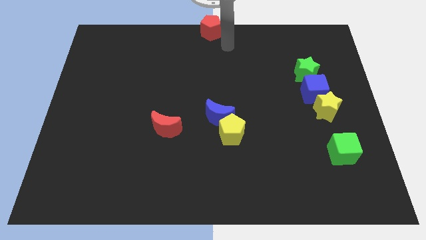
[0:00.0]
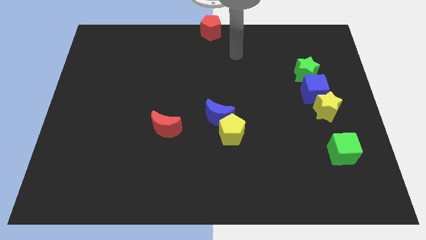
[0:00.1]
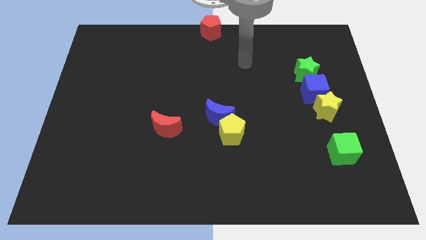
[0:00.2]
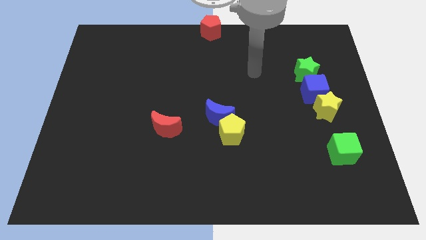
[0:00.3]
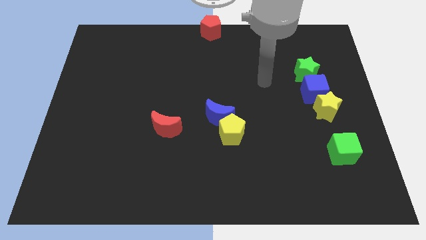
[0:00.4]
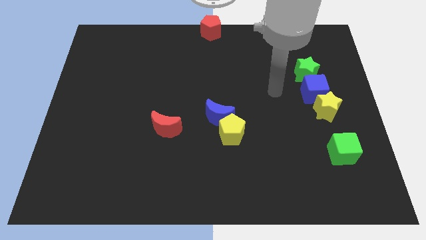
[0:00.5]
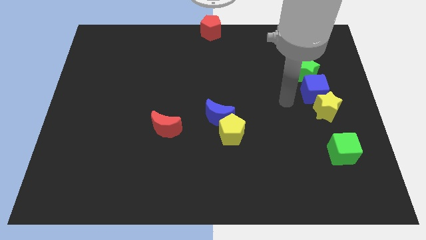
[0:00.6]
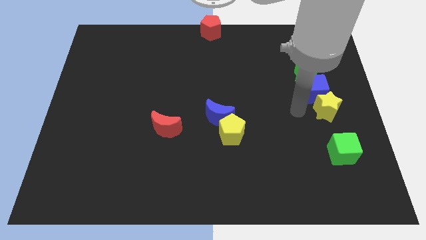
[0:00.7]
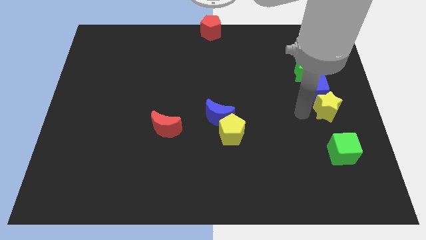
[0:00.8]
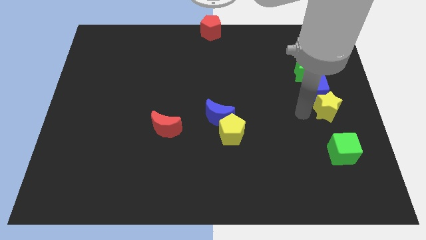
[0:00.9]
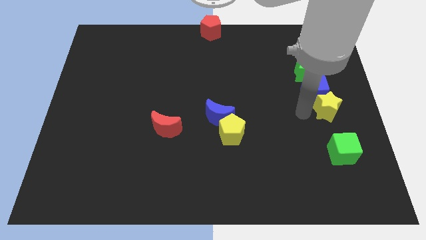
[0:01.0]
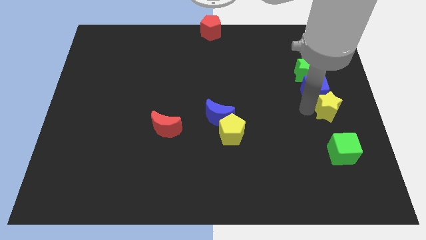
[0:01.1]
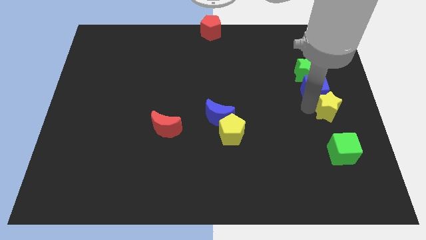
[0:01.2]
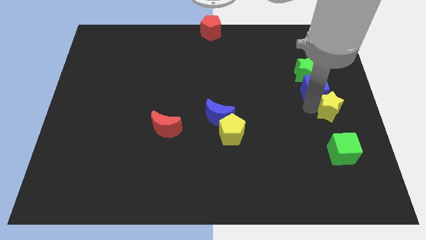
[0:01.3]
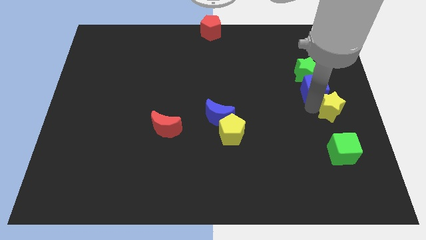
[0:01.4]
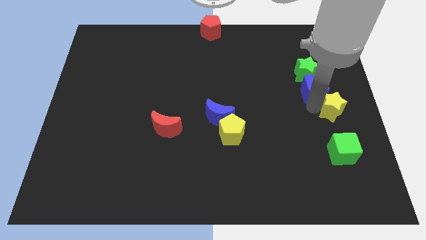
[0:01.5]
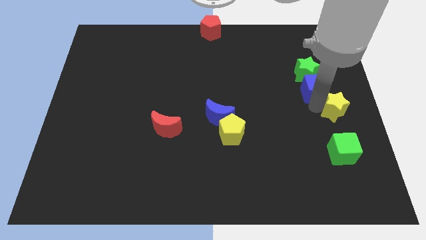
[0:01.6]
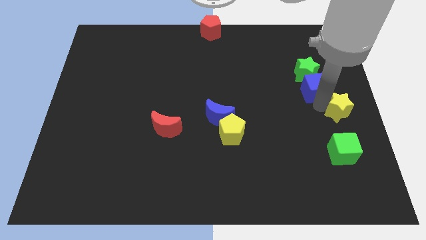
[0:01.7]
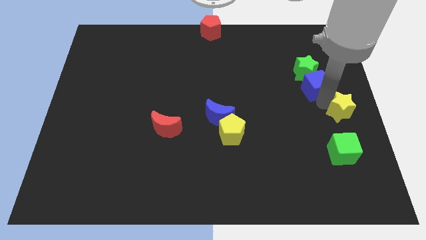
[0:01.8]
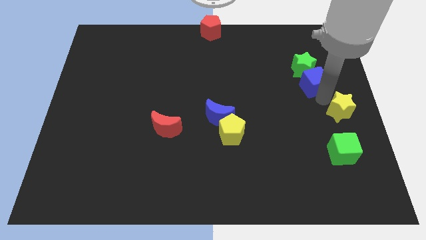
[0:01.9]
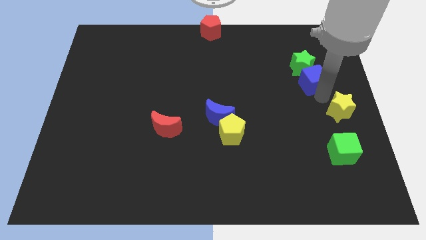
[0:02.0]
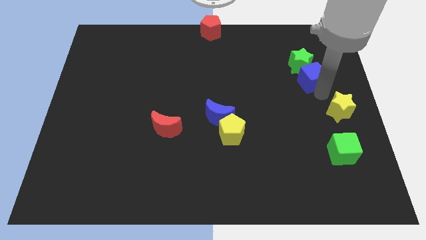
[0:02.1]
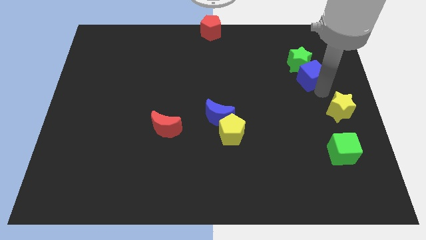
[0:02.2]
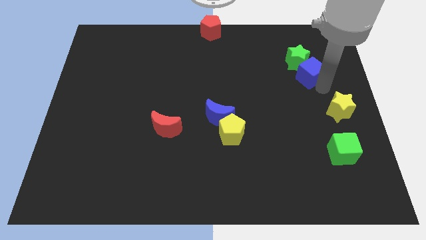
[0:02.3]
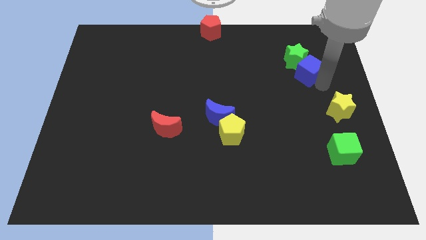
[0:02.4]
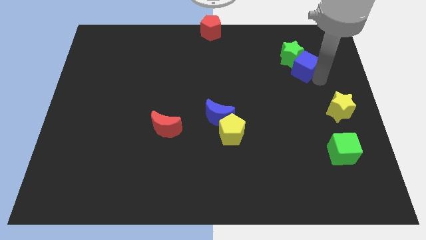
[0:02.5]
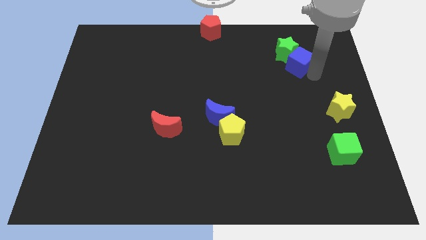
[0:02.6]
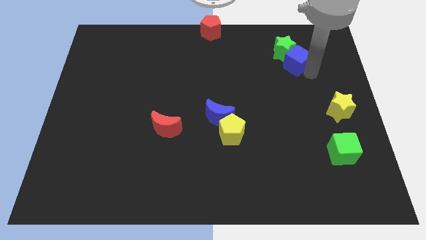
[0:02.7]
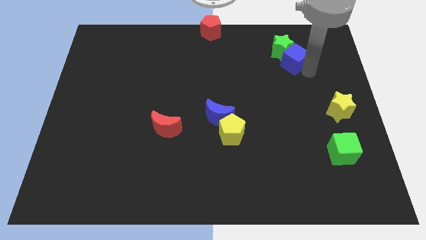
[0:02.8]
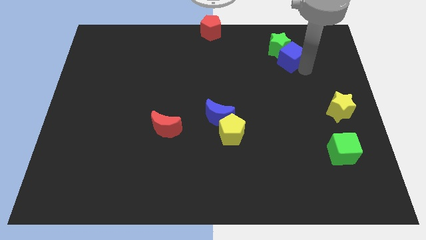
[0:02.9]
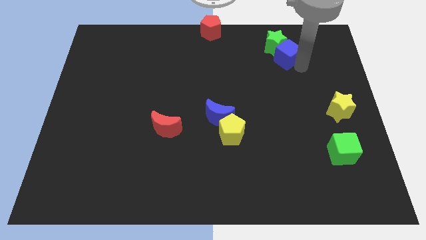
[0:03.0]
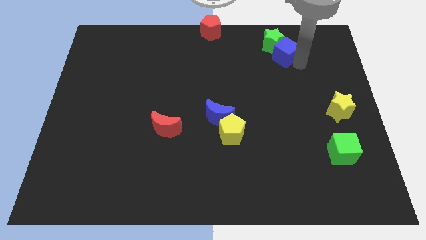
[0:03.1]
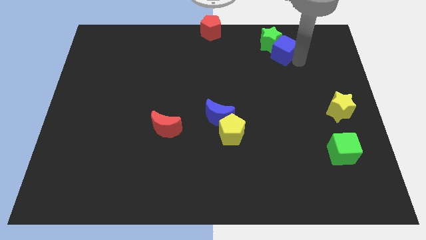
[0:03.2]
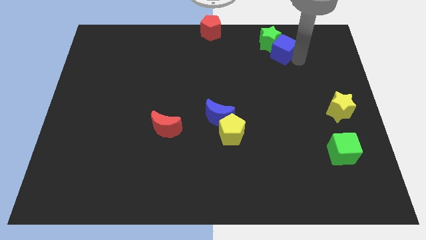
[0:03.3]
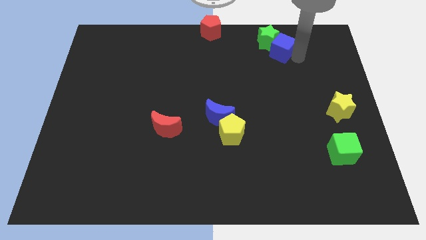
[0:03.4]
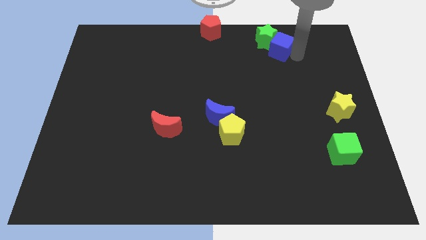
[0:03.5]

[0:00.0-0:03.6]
slide the blue cube and green star towards the red pentagon

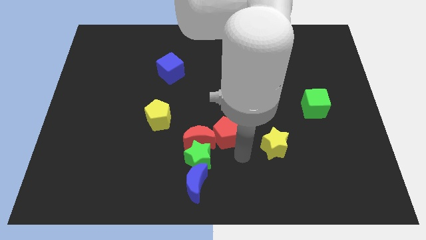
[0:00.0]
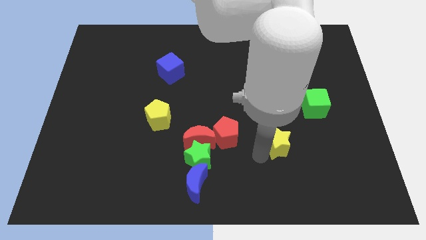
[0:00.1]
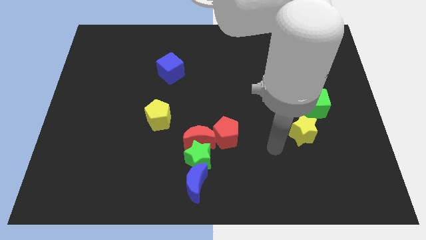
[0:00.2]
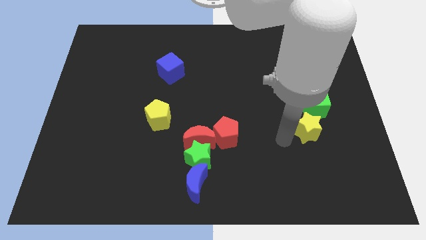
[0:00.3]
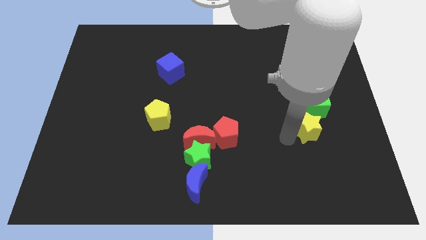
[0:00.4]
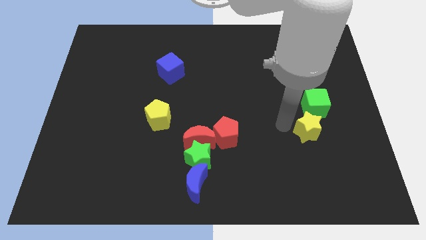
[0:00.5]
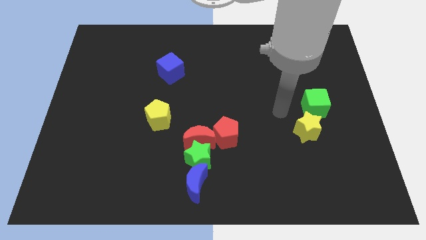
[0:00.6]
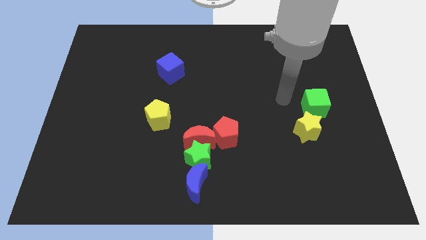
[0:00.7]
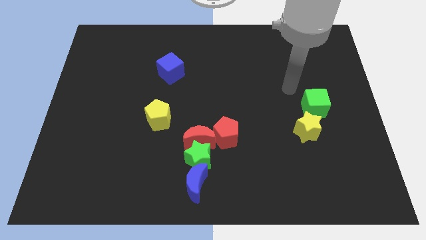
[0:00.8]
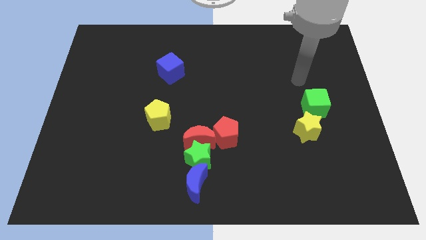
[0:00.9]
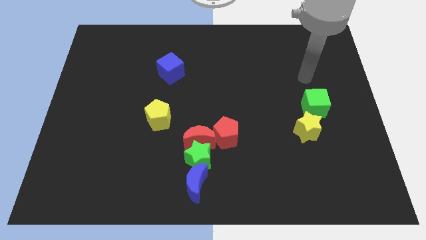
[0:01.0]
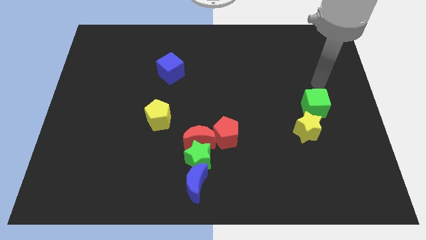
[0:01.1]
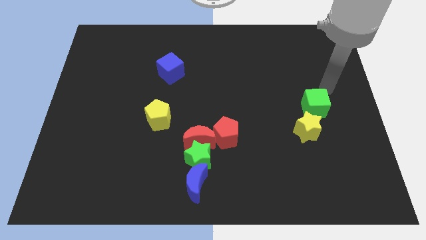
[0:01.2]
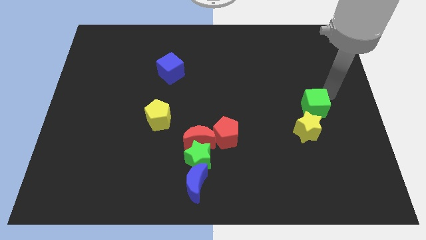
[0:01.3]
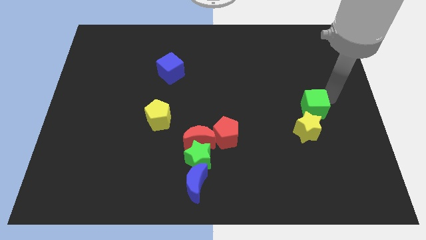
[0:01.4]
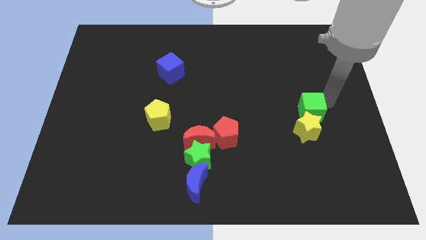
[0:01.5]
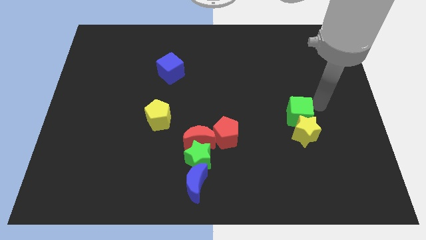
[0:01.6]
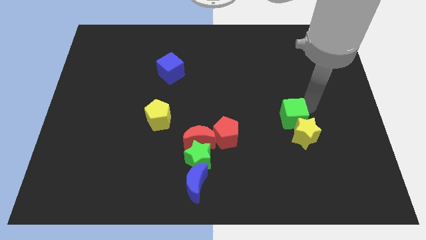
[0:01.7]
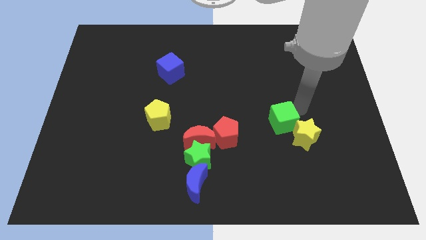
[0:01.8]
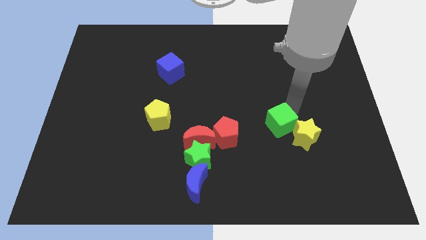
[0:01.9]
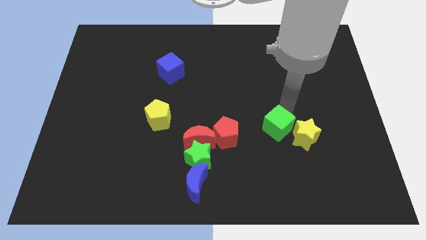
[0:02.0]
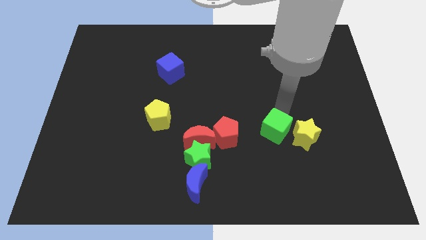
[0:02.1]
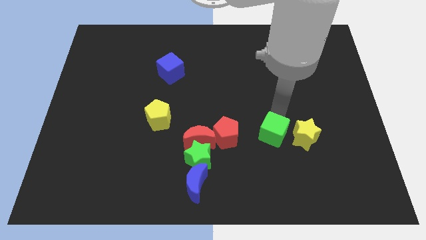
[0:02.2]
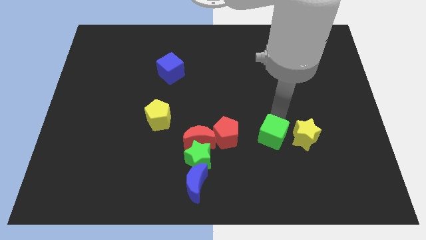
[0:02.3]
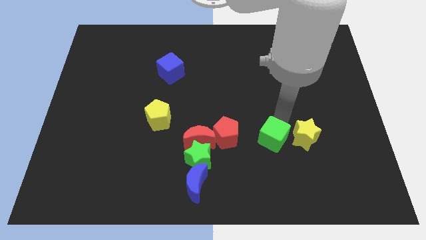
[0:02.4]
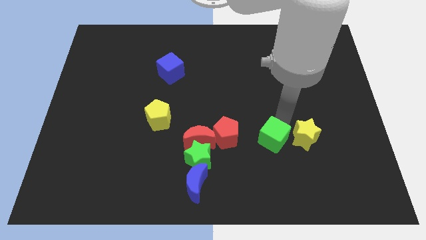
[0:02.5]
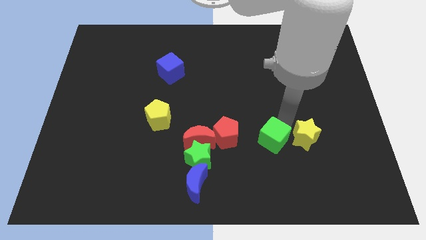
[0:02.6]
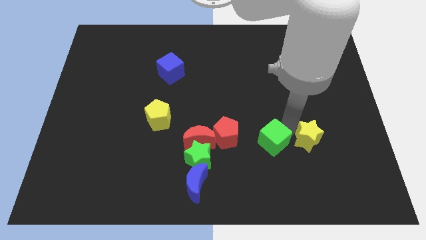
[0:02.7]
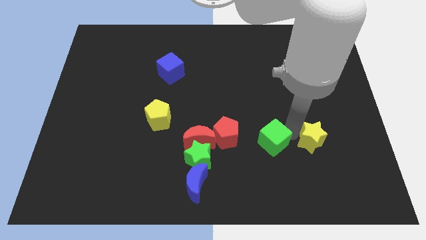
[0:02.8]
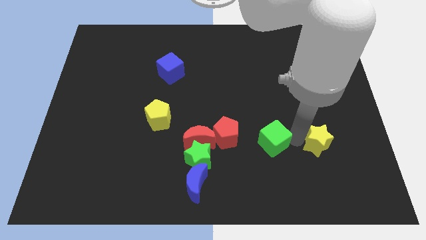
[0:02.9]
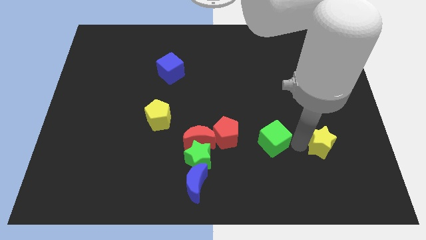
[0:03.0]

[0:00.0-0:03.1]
put the green cube parallel left to the yellow star

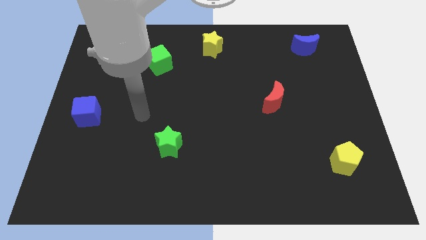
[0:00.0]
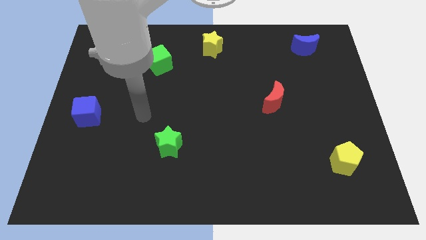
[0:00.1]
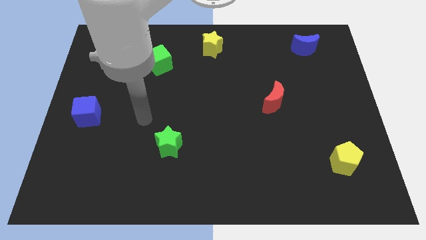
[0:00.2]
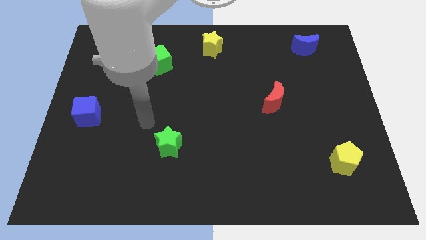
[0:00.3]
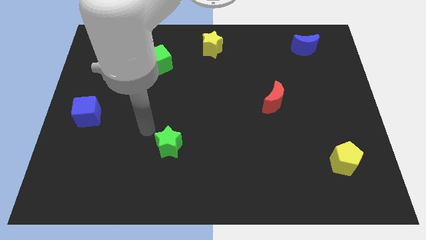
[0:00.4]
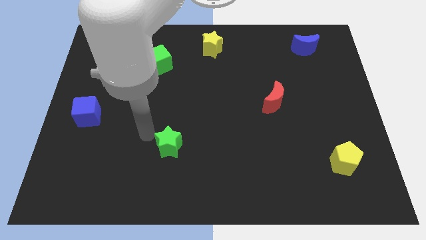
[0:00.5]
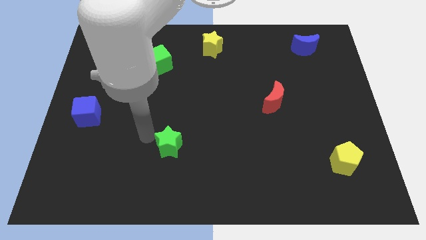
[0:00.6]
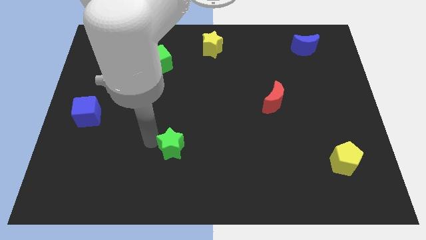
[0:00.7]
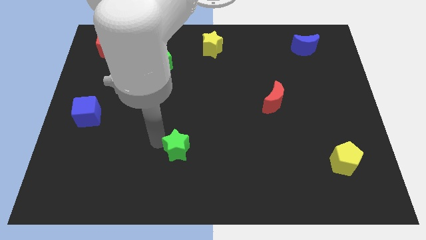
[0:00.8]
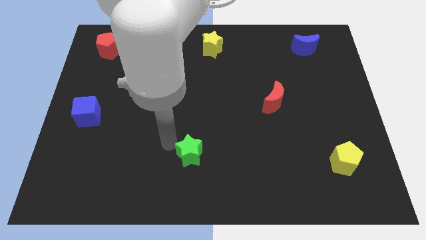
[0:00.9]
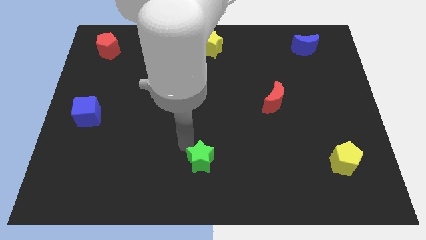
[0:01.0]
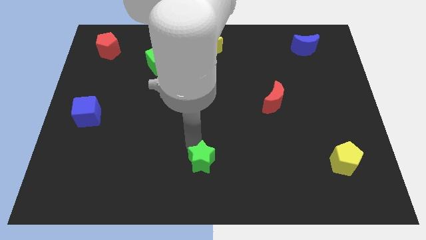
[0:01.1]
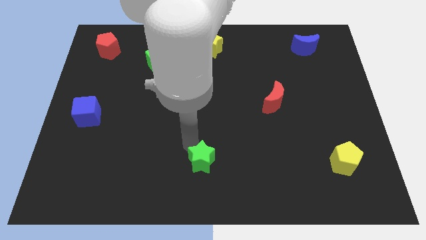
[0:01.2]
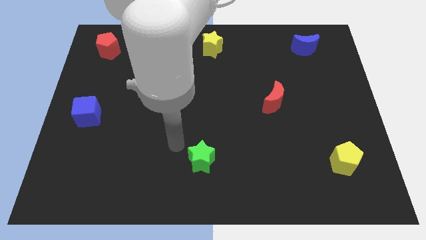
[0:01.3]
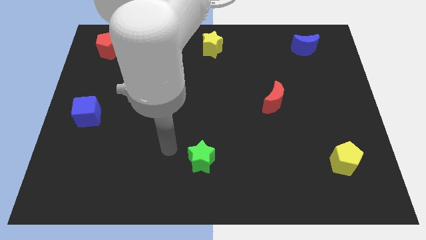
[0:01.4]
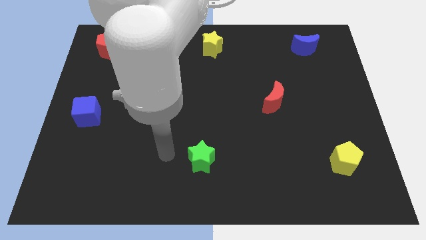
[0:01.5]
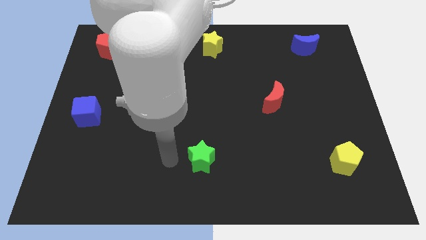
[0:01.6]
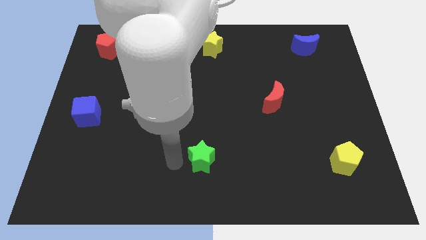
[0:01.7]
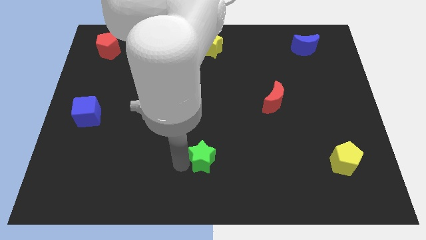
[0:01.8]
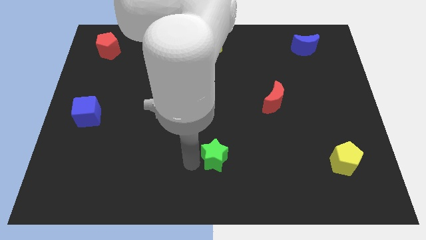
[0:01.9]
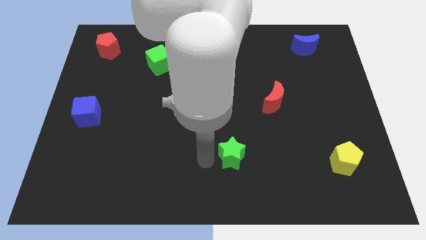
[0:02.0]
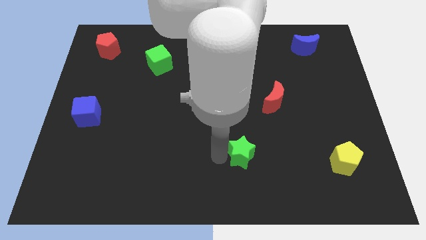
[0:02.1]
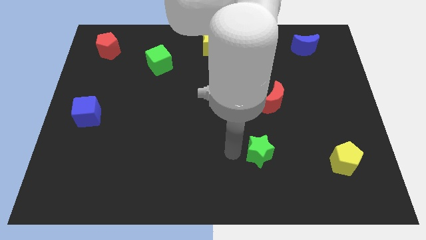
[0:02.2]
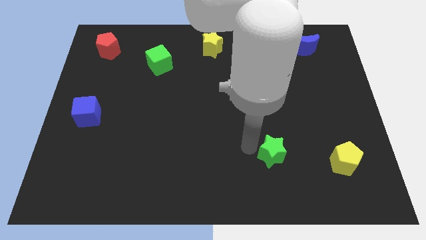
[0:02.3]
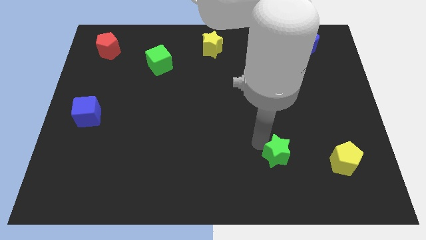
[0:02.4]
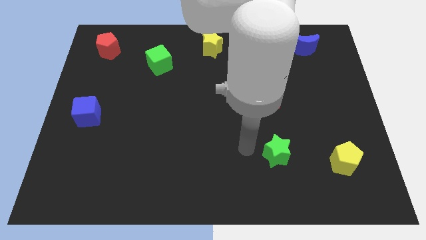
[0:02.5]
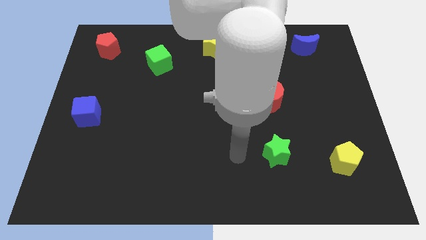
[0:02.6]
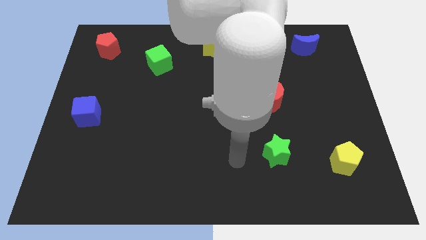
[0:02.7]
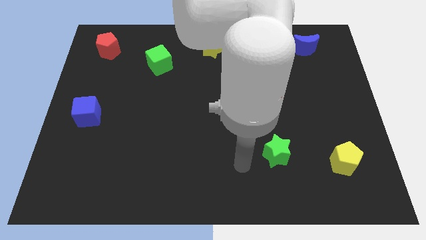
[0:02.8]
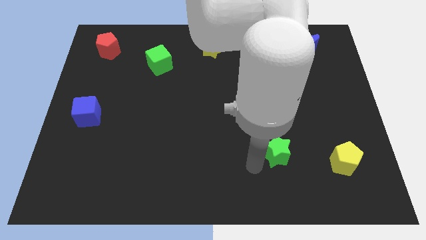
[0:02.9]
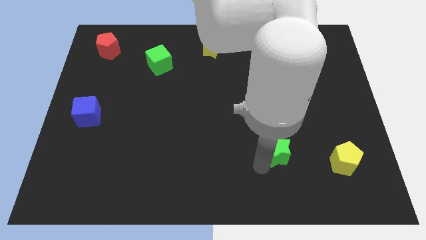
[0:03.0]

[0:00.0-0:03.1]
push green star to the left of yellow pentagon
